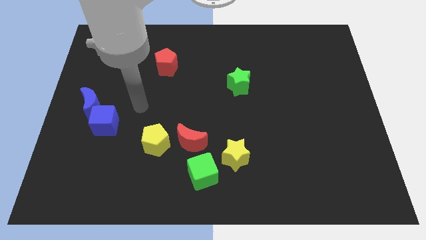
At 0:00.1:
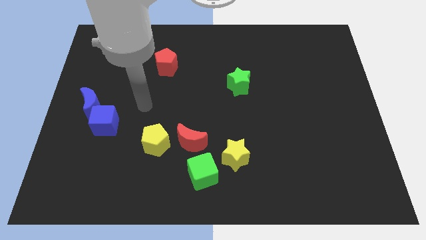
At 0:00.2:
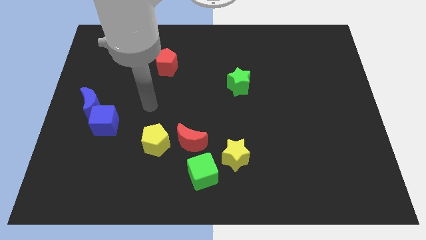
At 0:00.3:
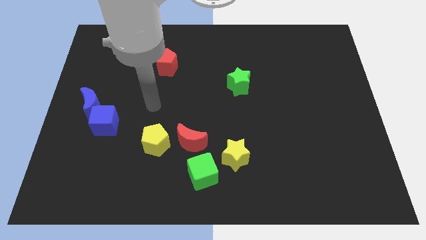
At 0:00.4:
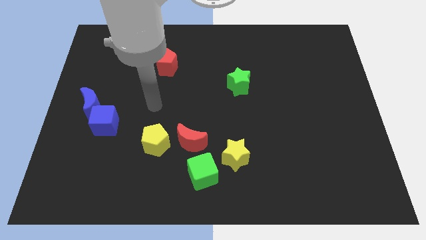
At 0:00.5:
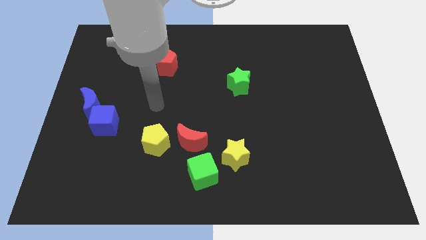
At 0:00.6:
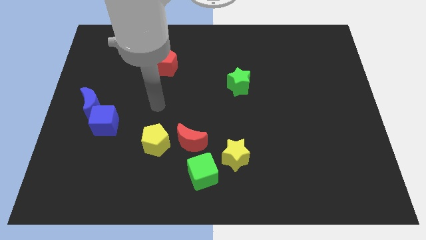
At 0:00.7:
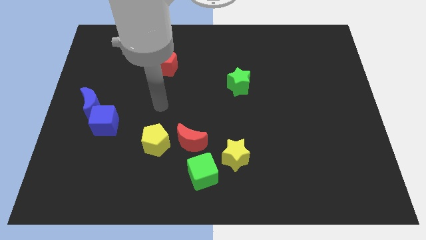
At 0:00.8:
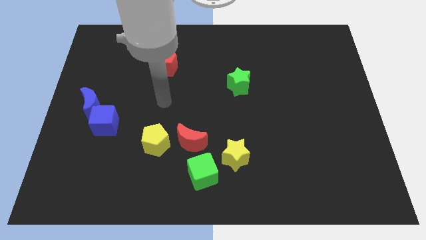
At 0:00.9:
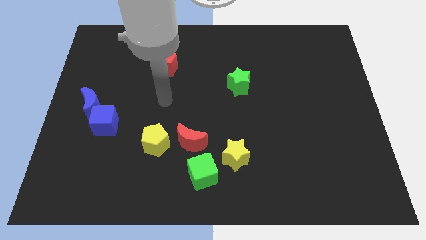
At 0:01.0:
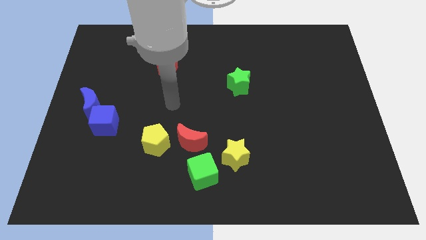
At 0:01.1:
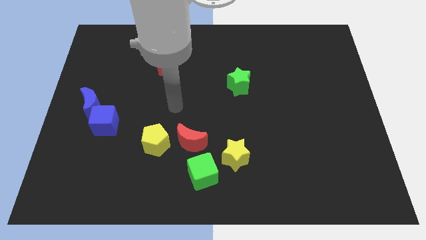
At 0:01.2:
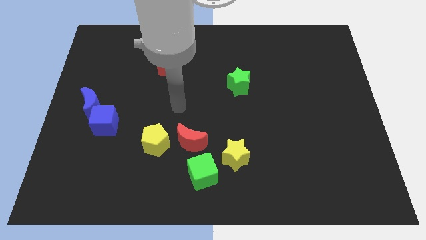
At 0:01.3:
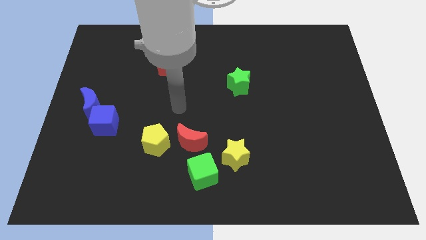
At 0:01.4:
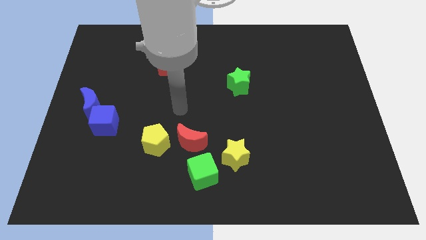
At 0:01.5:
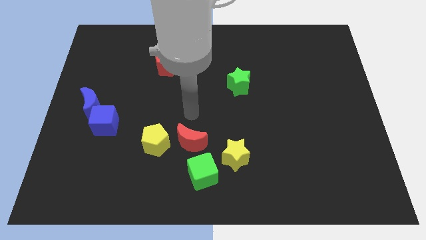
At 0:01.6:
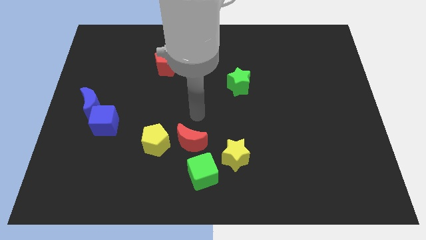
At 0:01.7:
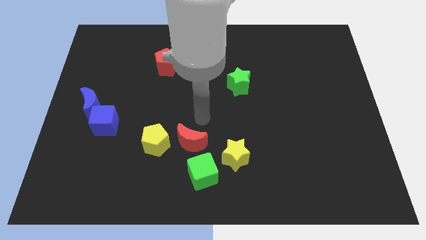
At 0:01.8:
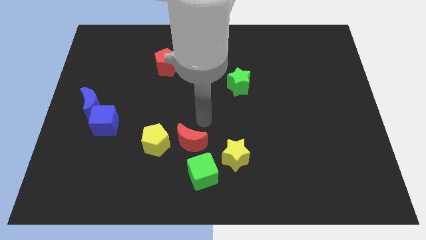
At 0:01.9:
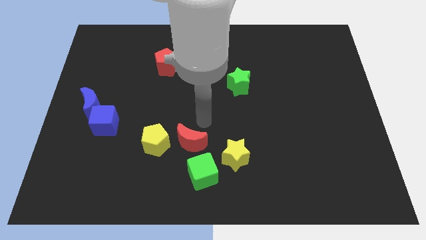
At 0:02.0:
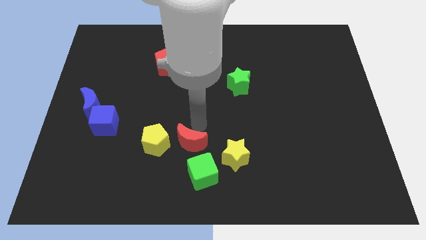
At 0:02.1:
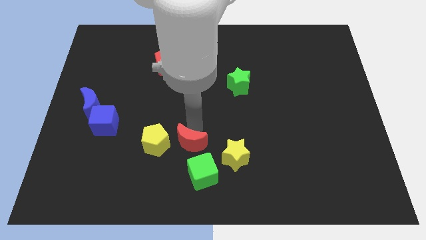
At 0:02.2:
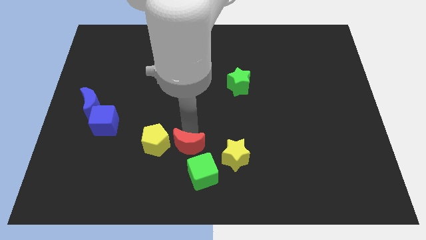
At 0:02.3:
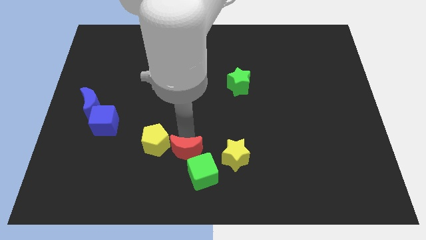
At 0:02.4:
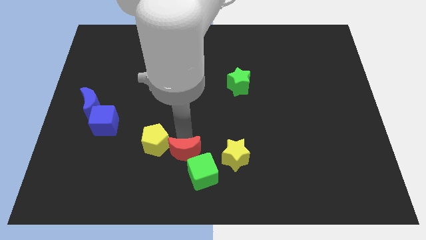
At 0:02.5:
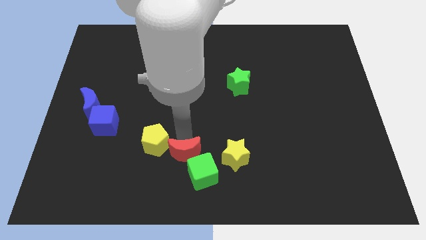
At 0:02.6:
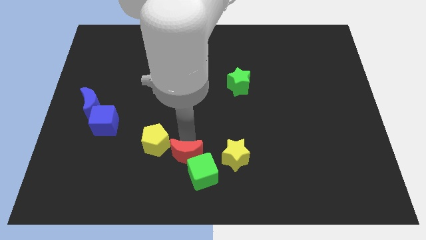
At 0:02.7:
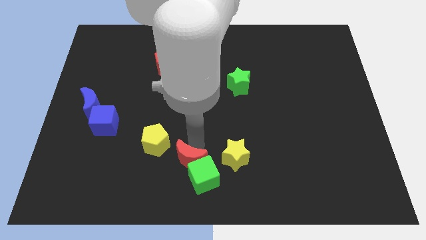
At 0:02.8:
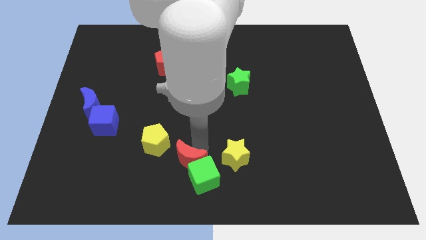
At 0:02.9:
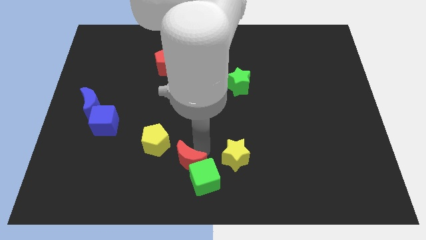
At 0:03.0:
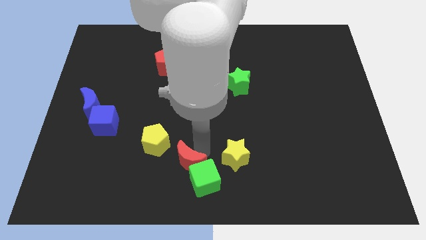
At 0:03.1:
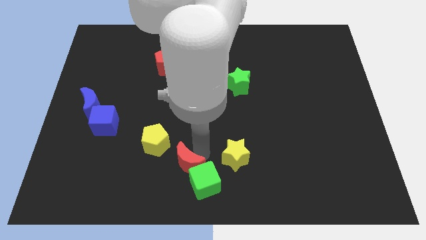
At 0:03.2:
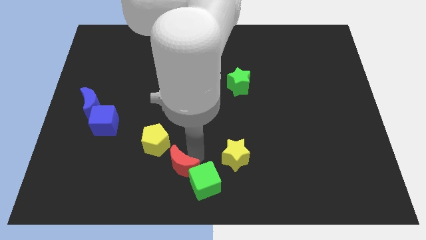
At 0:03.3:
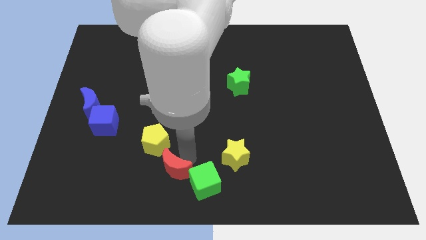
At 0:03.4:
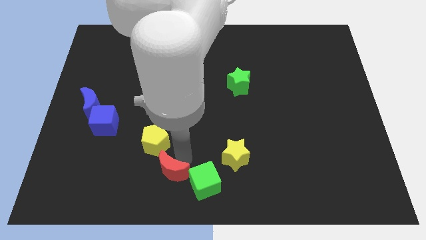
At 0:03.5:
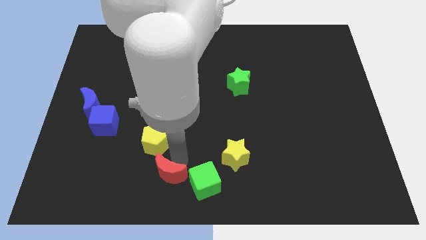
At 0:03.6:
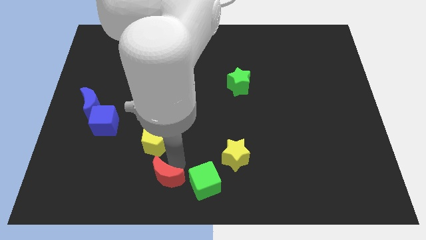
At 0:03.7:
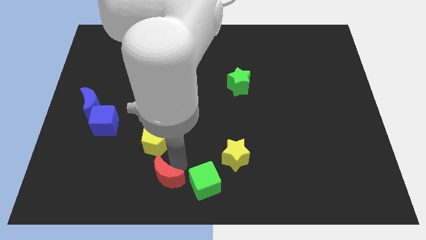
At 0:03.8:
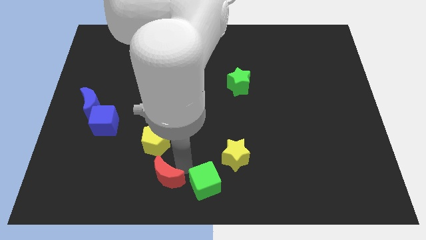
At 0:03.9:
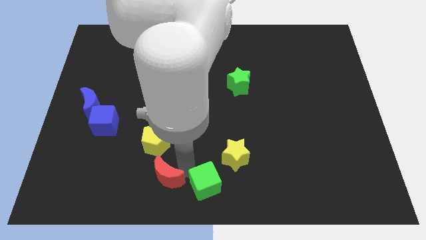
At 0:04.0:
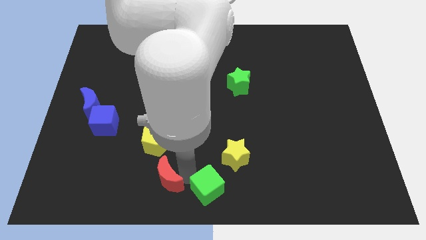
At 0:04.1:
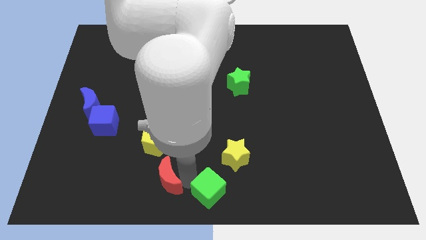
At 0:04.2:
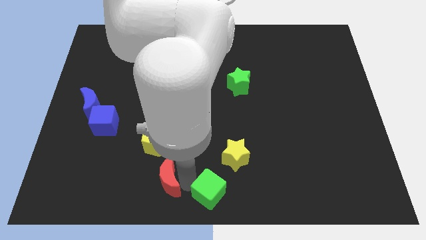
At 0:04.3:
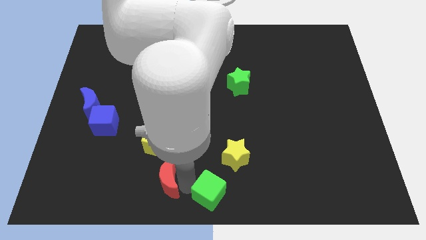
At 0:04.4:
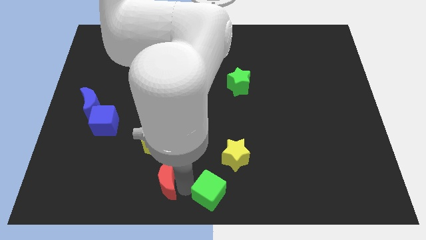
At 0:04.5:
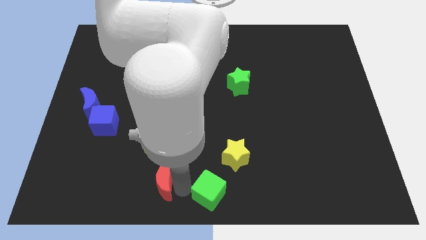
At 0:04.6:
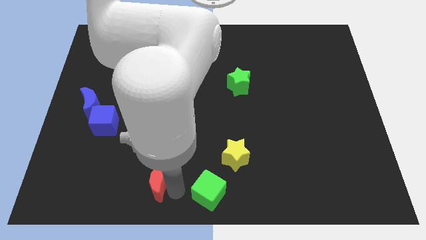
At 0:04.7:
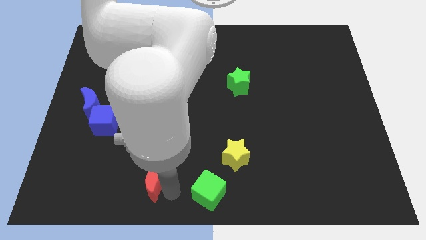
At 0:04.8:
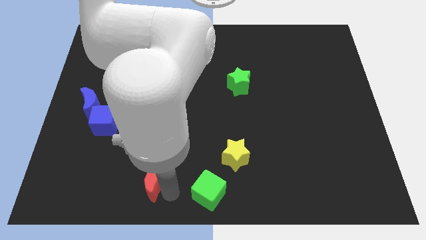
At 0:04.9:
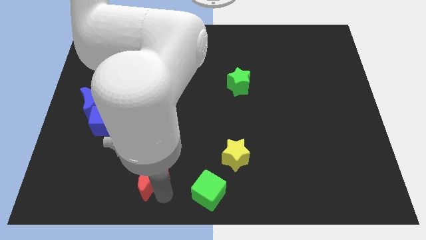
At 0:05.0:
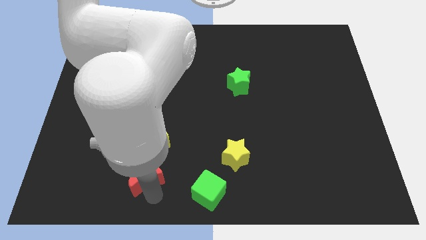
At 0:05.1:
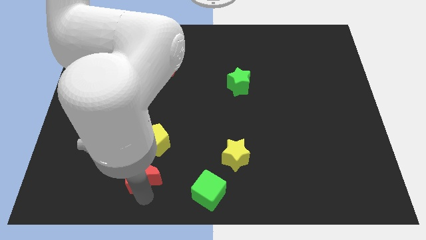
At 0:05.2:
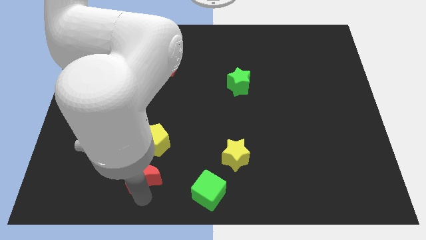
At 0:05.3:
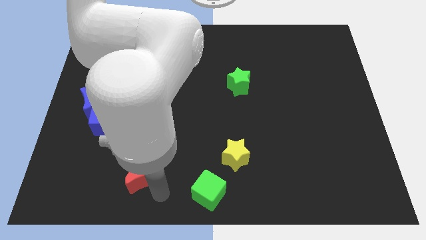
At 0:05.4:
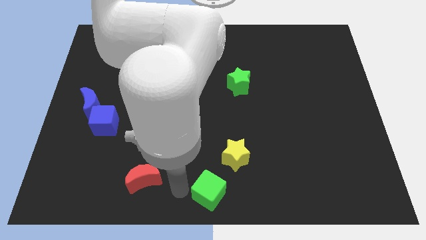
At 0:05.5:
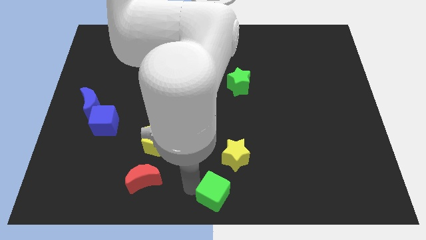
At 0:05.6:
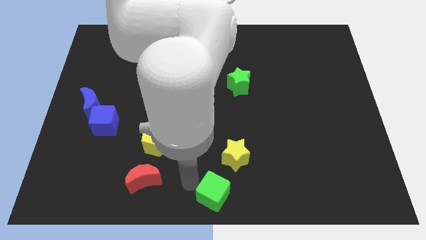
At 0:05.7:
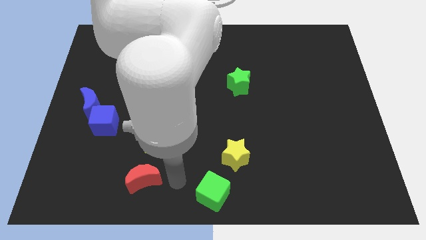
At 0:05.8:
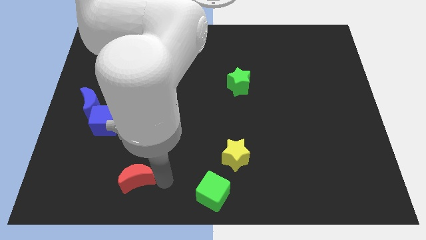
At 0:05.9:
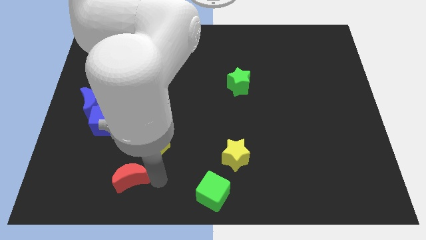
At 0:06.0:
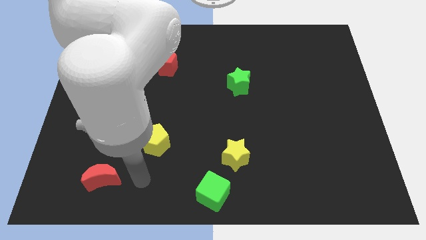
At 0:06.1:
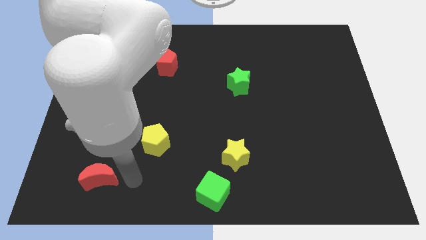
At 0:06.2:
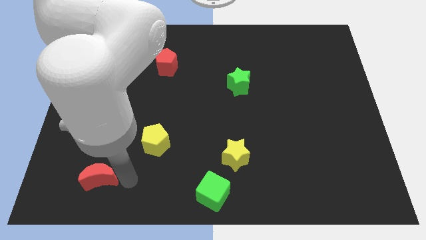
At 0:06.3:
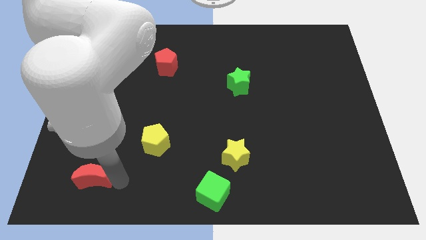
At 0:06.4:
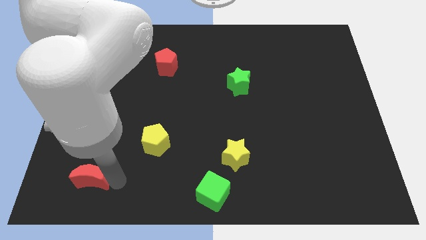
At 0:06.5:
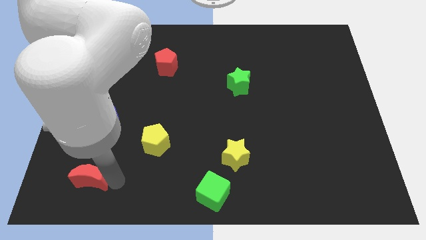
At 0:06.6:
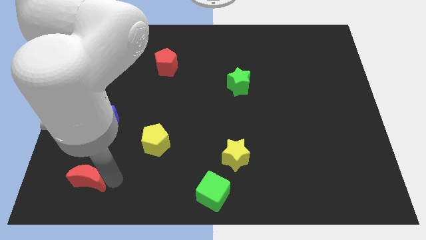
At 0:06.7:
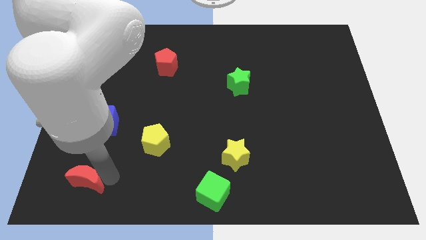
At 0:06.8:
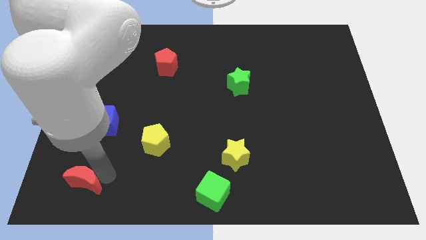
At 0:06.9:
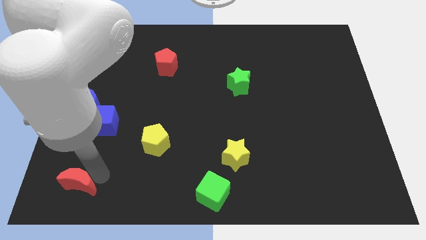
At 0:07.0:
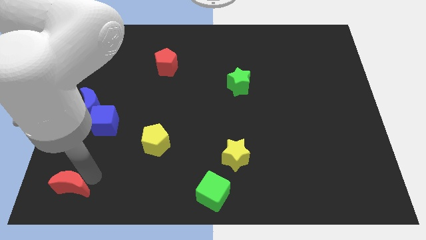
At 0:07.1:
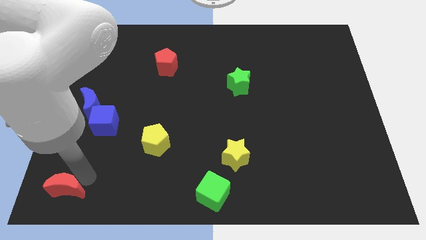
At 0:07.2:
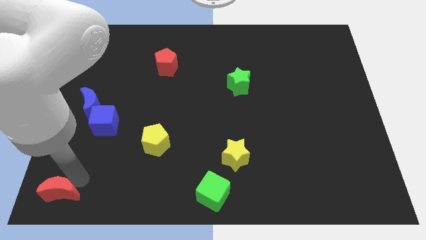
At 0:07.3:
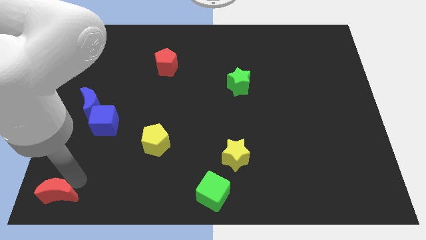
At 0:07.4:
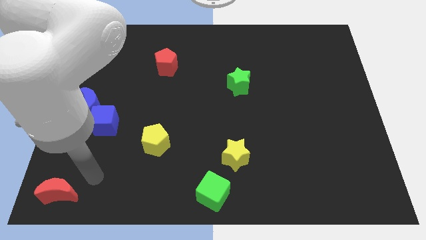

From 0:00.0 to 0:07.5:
drag the red moon to the bottom left side of the table

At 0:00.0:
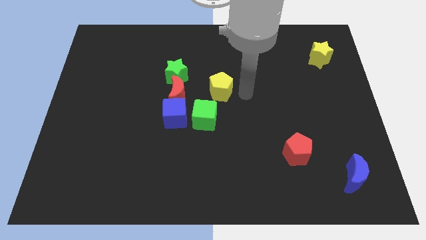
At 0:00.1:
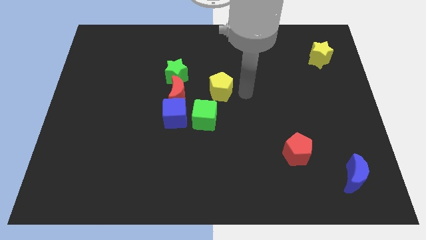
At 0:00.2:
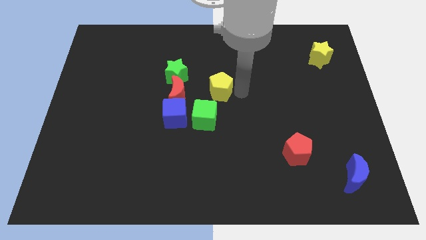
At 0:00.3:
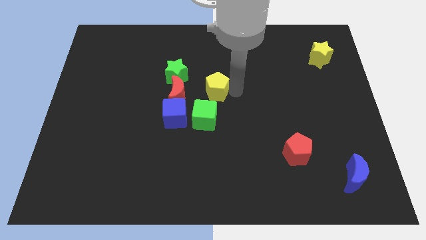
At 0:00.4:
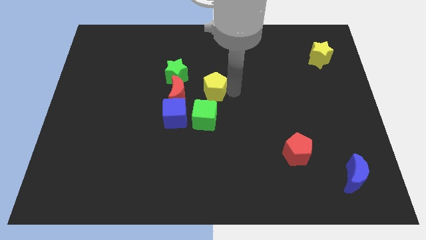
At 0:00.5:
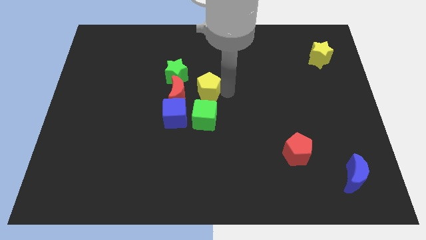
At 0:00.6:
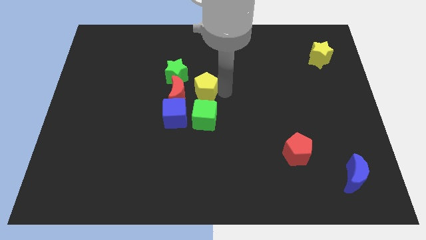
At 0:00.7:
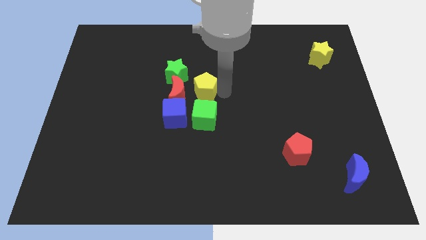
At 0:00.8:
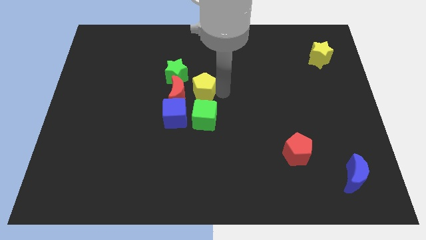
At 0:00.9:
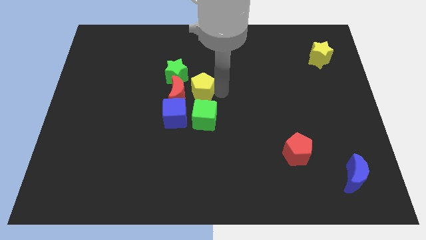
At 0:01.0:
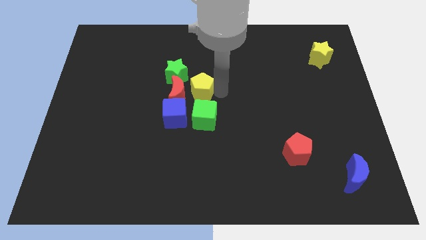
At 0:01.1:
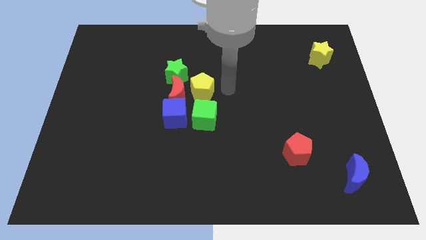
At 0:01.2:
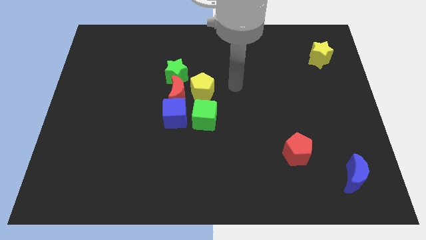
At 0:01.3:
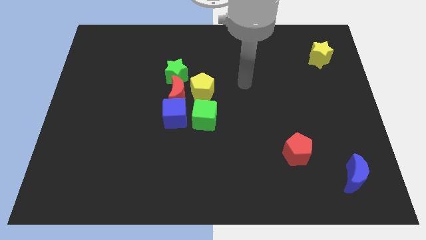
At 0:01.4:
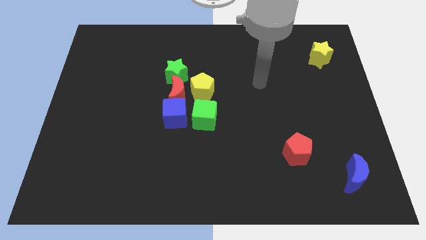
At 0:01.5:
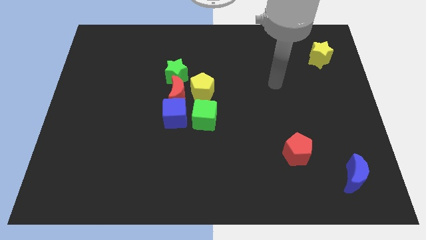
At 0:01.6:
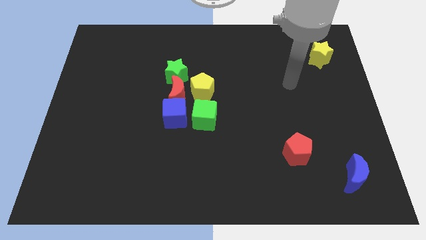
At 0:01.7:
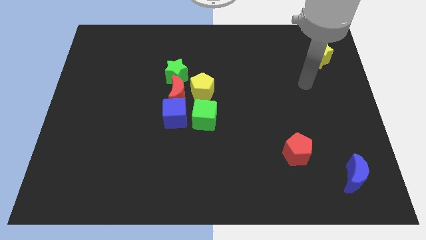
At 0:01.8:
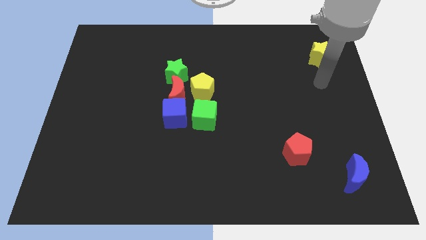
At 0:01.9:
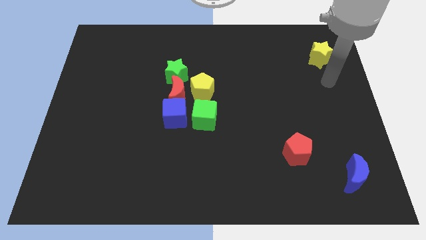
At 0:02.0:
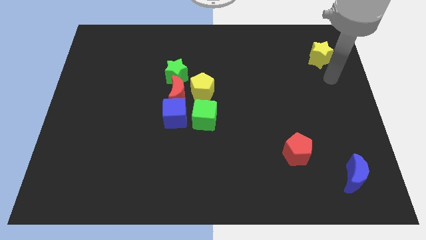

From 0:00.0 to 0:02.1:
put the yellow pentagon above the green cube
